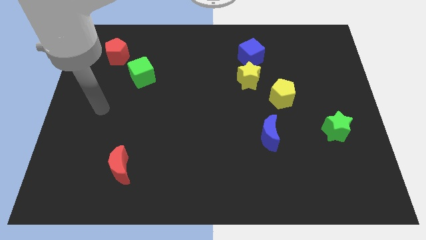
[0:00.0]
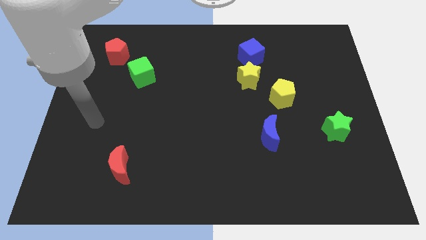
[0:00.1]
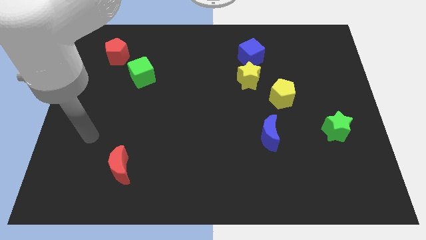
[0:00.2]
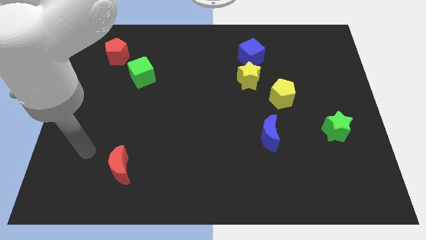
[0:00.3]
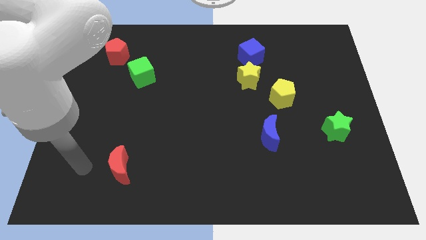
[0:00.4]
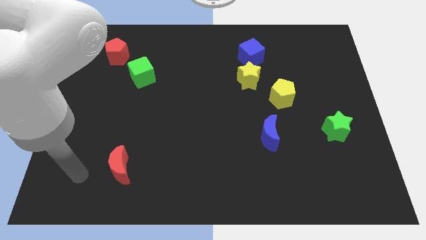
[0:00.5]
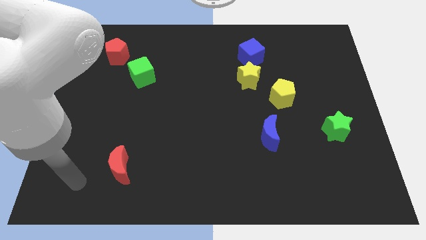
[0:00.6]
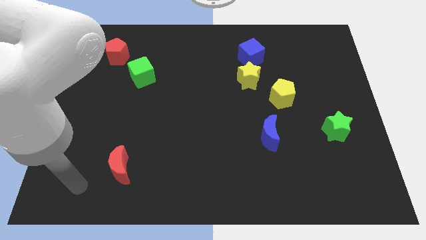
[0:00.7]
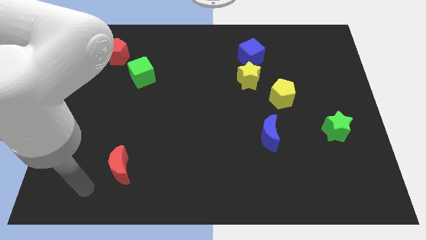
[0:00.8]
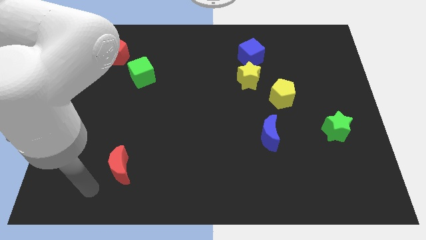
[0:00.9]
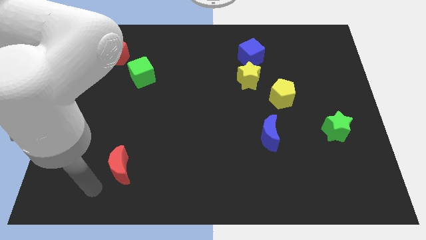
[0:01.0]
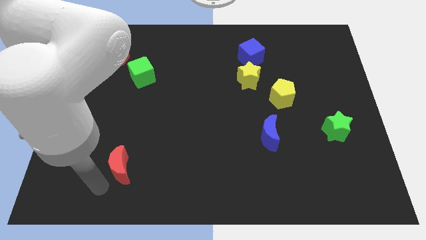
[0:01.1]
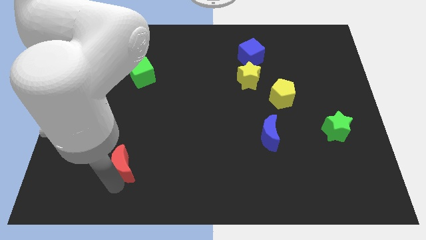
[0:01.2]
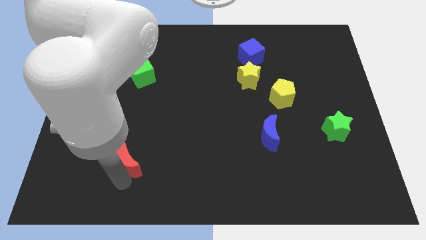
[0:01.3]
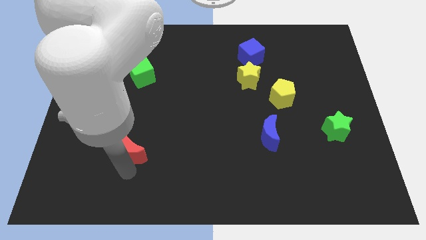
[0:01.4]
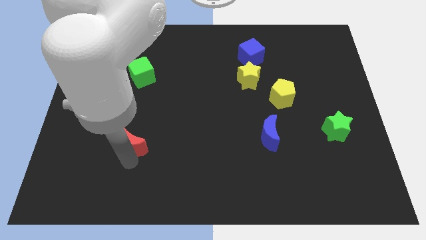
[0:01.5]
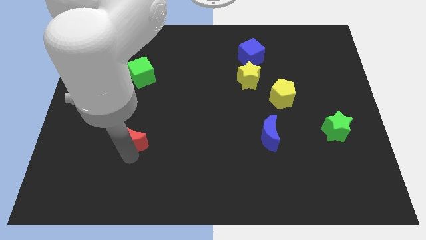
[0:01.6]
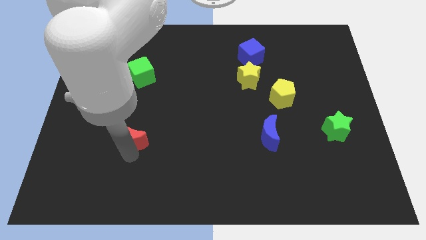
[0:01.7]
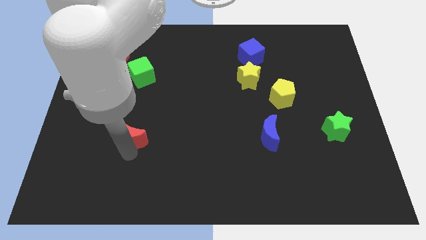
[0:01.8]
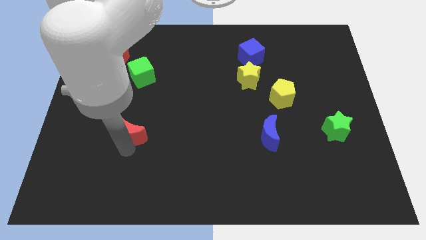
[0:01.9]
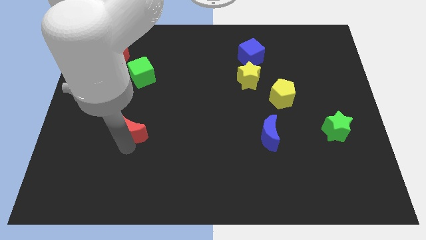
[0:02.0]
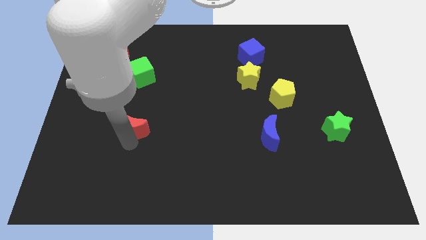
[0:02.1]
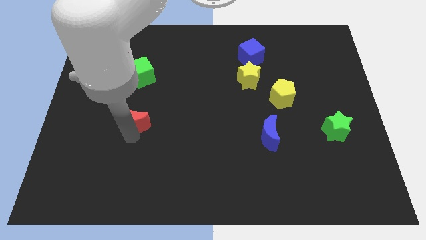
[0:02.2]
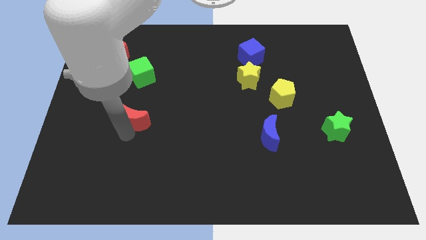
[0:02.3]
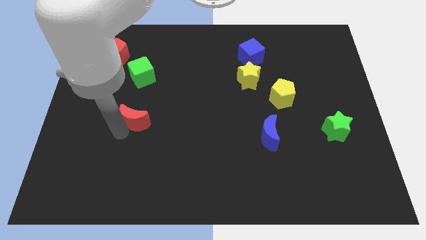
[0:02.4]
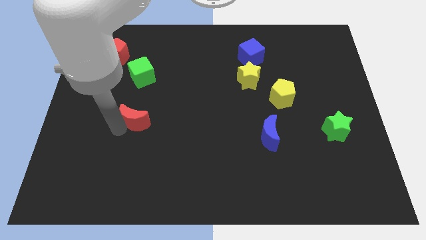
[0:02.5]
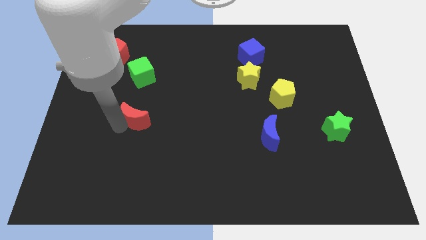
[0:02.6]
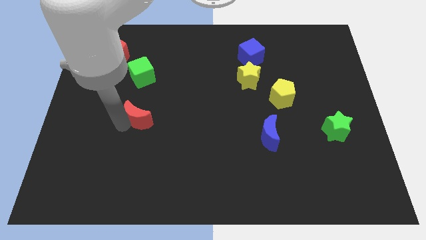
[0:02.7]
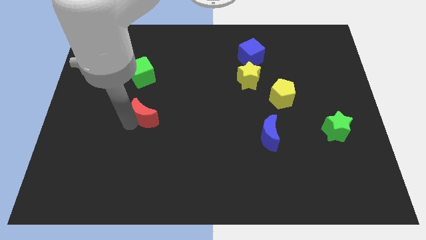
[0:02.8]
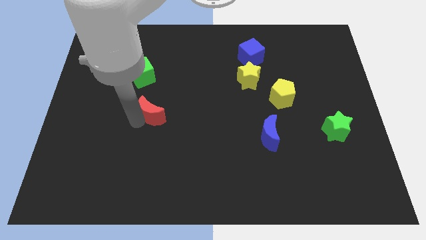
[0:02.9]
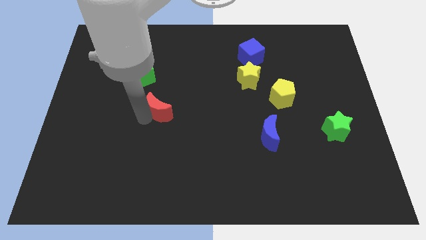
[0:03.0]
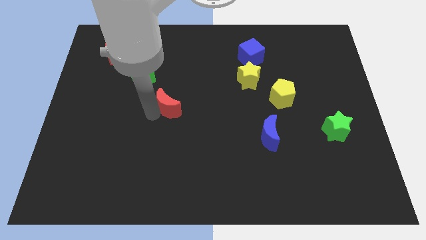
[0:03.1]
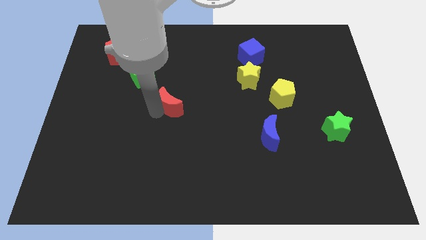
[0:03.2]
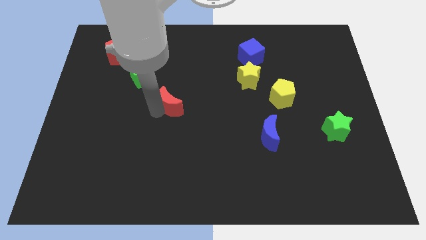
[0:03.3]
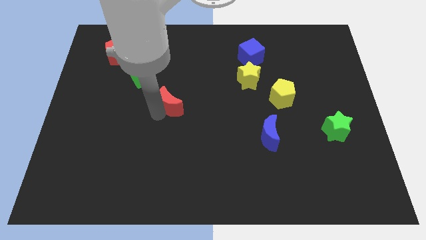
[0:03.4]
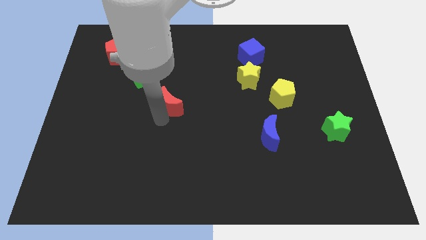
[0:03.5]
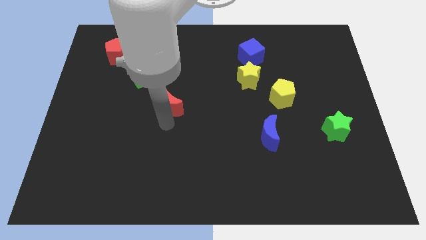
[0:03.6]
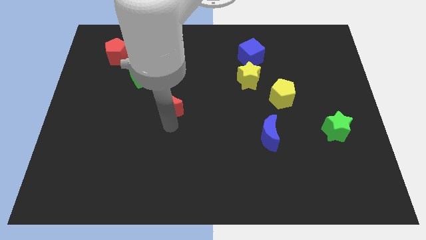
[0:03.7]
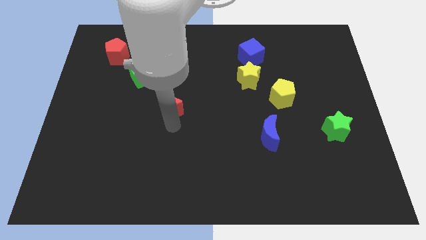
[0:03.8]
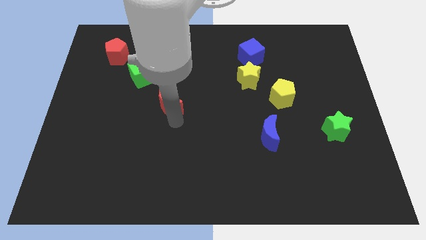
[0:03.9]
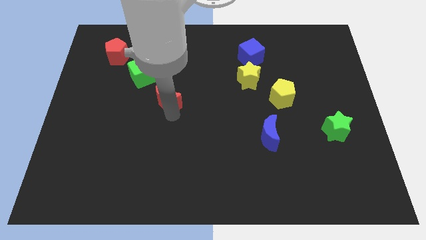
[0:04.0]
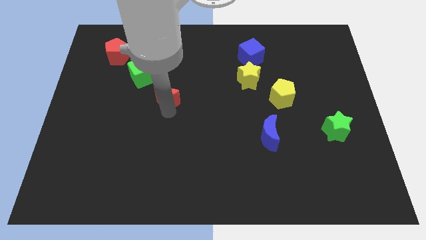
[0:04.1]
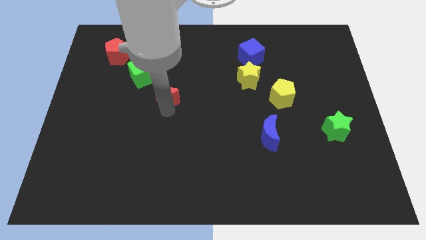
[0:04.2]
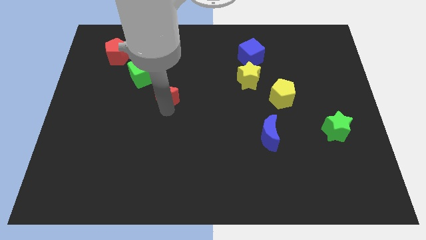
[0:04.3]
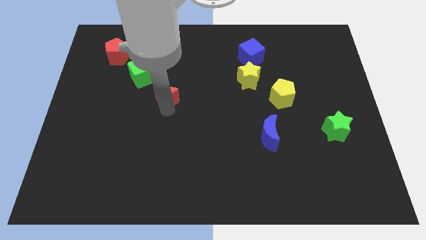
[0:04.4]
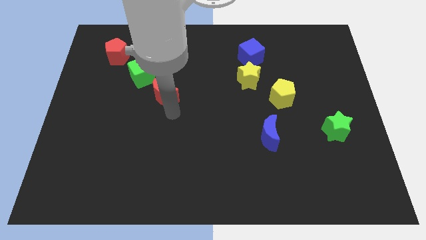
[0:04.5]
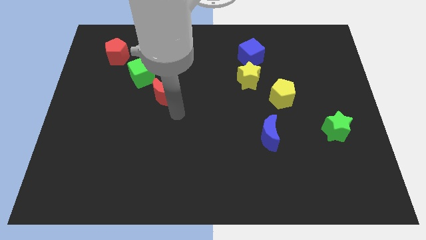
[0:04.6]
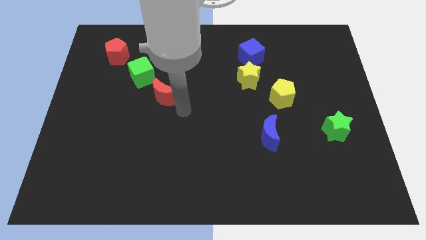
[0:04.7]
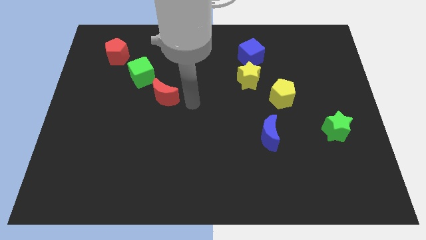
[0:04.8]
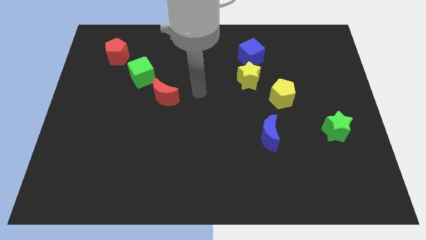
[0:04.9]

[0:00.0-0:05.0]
push the red moon to the bottom right of the green cube

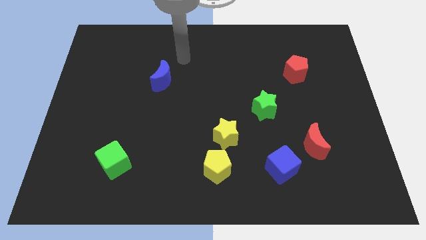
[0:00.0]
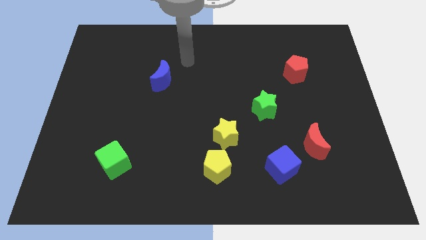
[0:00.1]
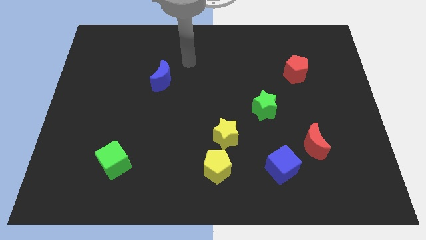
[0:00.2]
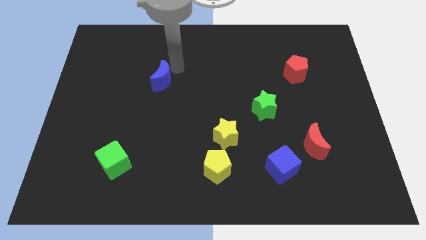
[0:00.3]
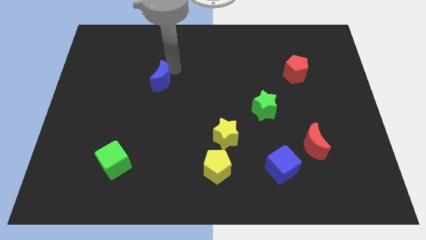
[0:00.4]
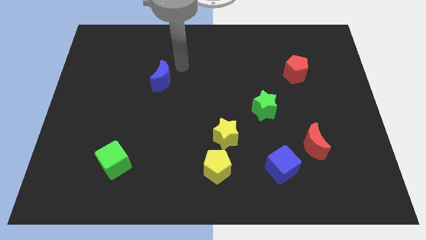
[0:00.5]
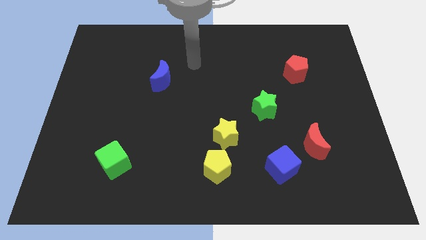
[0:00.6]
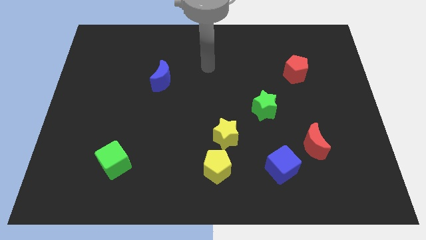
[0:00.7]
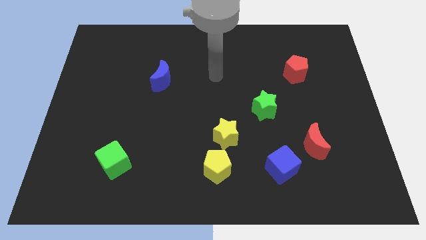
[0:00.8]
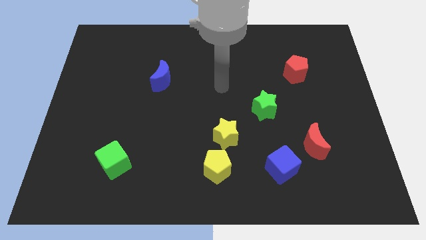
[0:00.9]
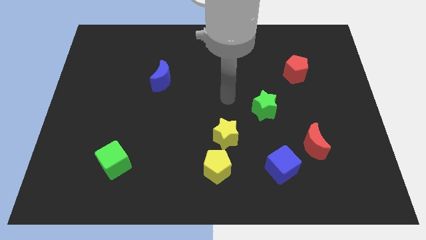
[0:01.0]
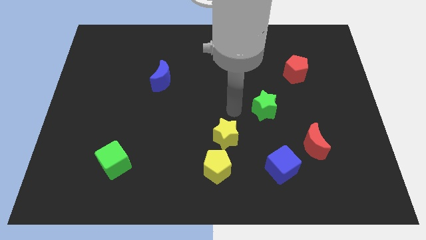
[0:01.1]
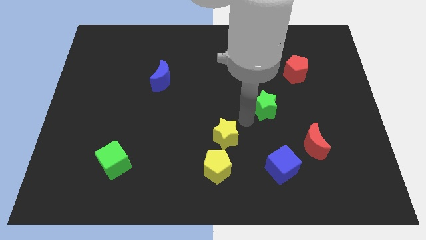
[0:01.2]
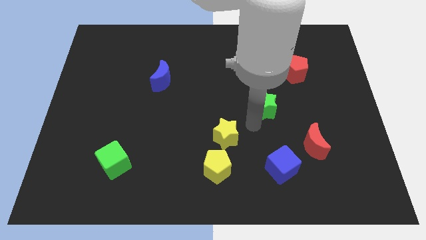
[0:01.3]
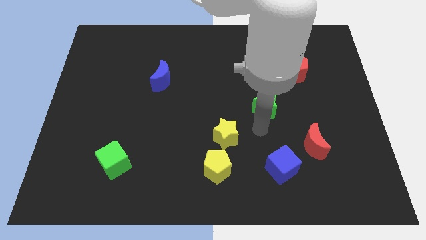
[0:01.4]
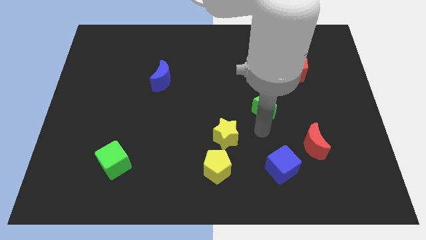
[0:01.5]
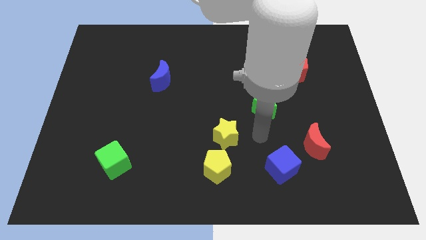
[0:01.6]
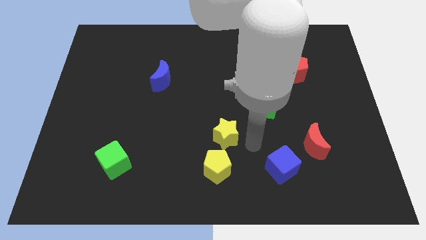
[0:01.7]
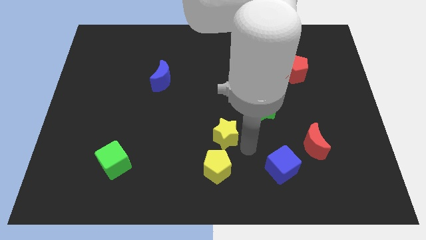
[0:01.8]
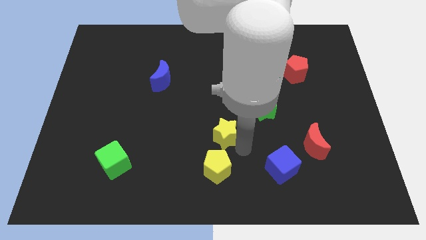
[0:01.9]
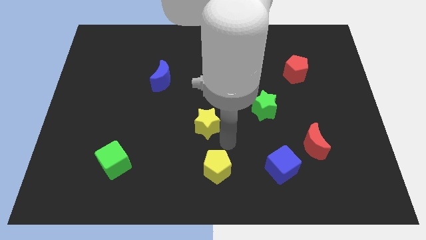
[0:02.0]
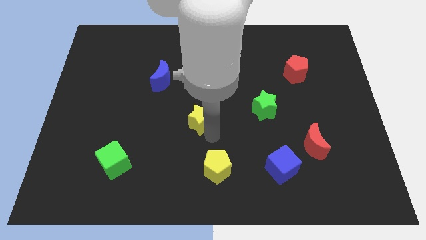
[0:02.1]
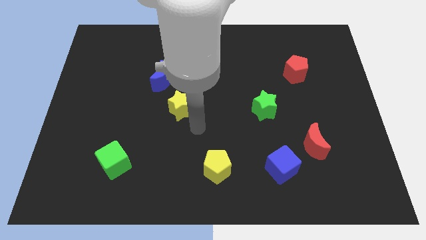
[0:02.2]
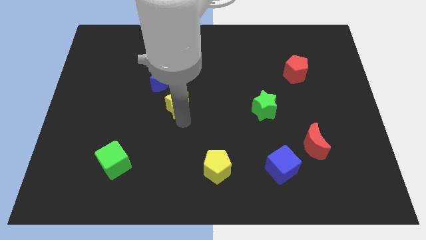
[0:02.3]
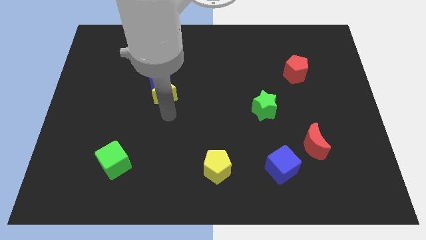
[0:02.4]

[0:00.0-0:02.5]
move the yellow star below to the blue moon

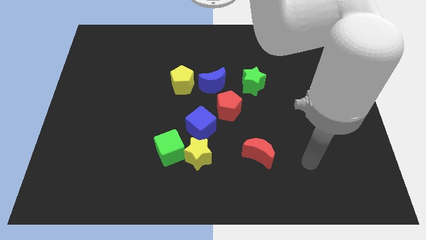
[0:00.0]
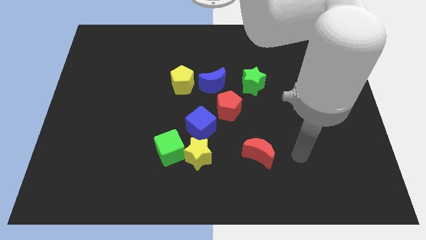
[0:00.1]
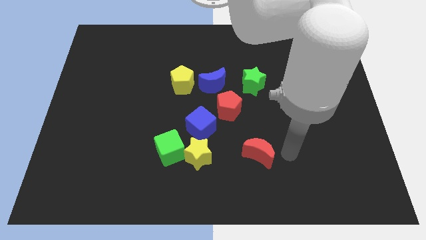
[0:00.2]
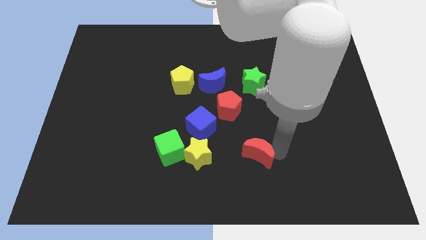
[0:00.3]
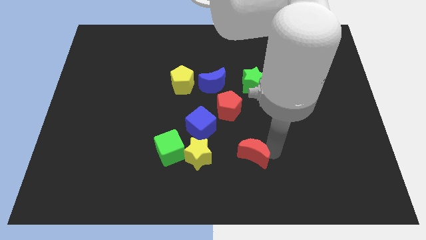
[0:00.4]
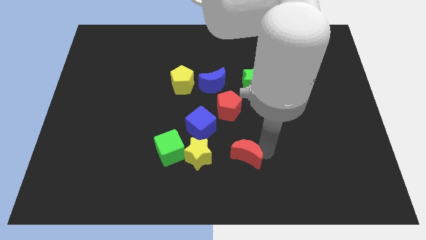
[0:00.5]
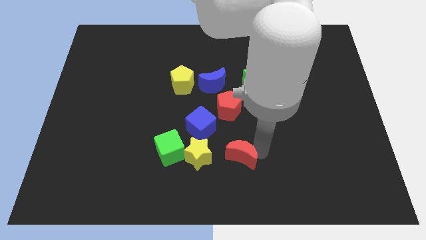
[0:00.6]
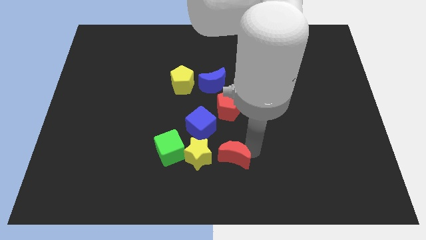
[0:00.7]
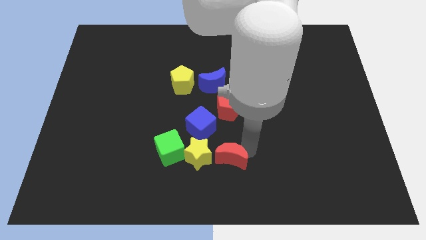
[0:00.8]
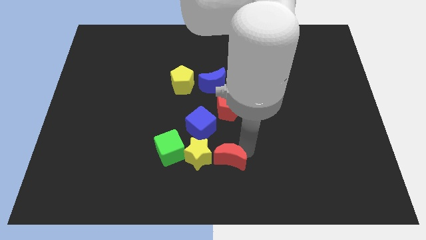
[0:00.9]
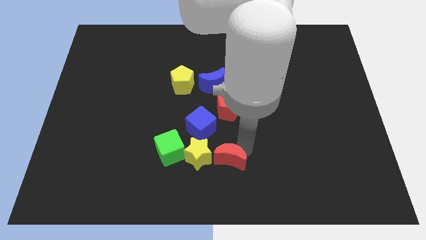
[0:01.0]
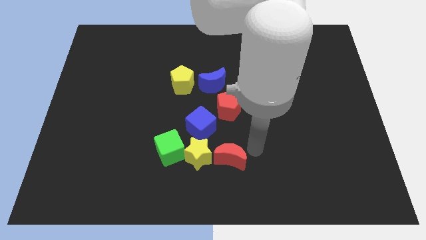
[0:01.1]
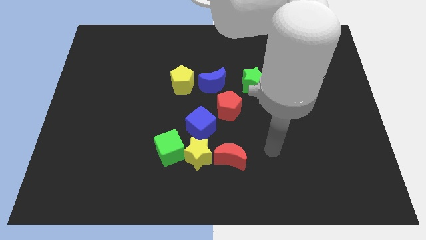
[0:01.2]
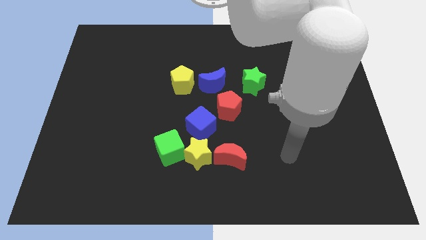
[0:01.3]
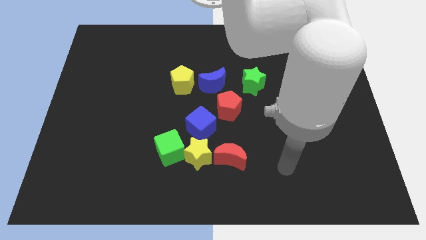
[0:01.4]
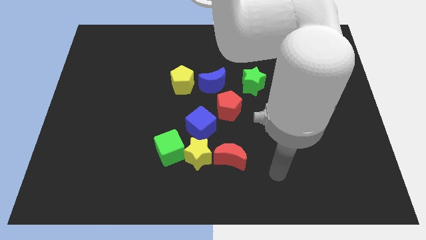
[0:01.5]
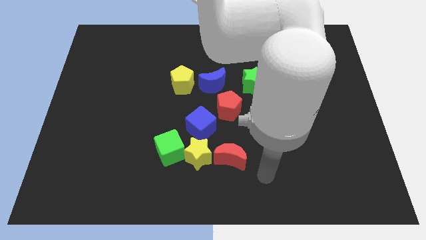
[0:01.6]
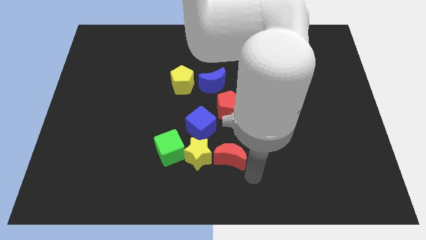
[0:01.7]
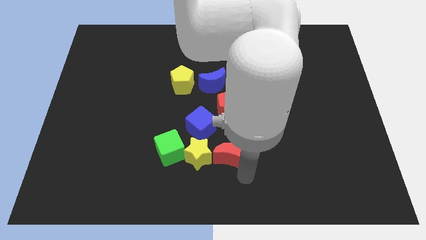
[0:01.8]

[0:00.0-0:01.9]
place the red crescent to the right of the yellow star
